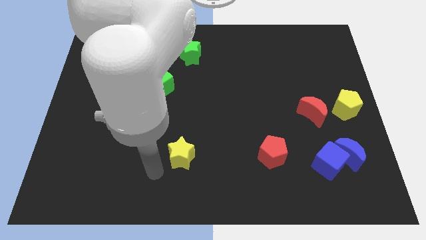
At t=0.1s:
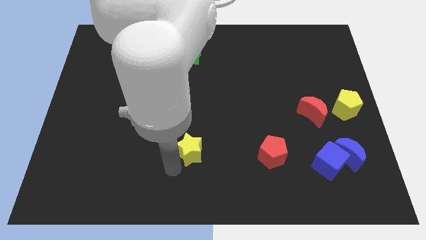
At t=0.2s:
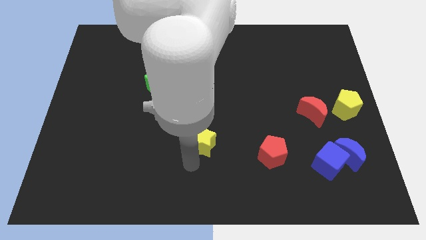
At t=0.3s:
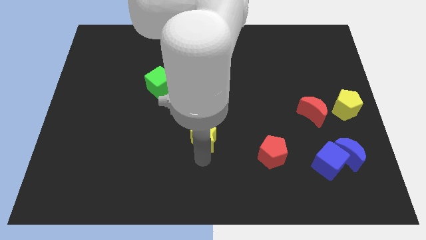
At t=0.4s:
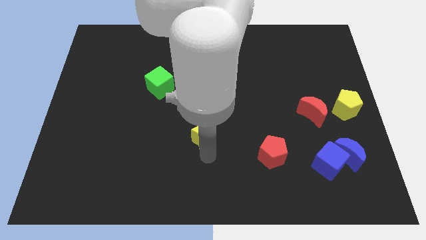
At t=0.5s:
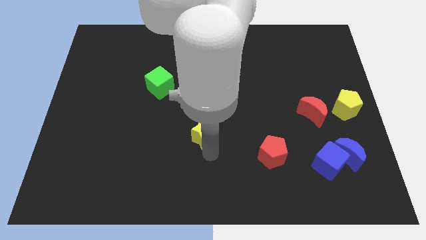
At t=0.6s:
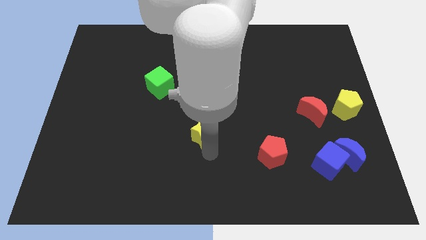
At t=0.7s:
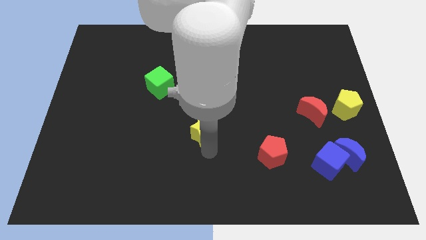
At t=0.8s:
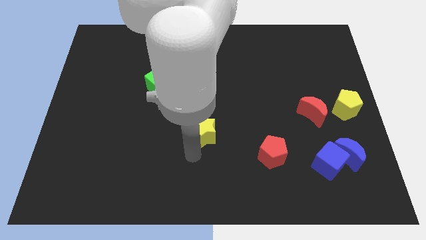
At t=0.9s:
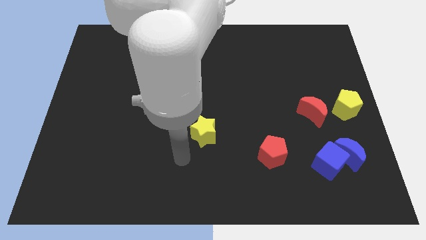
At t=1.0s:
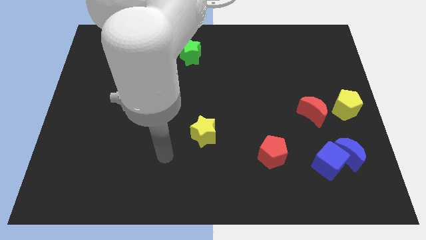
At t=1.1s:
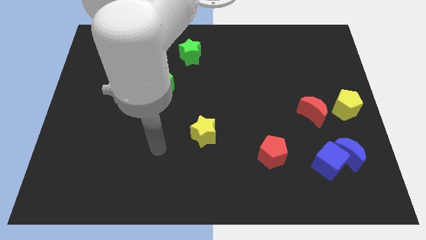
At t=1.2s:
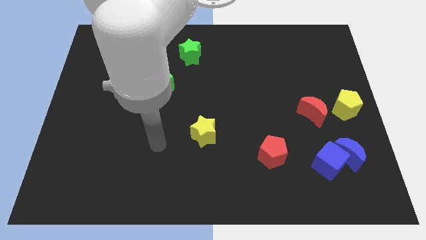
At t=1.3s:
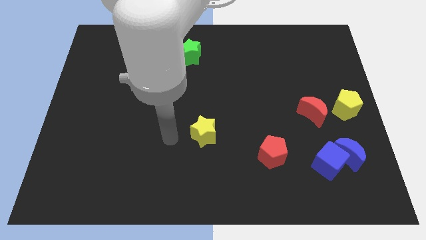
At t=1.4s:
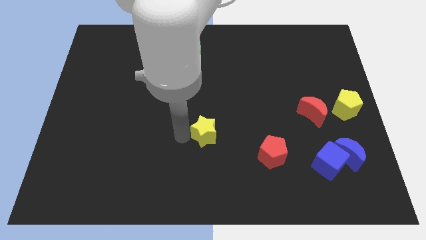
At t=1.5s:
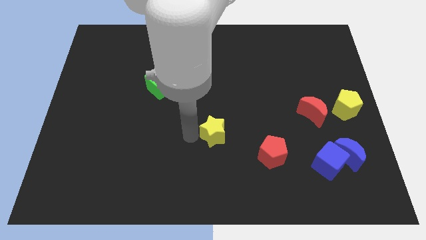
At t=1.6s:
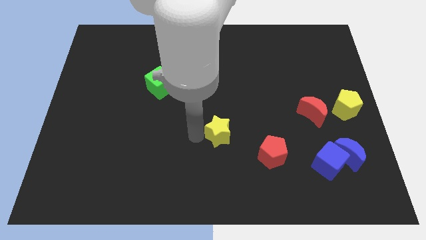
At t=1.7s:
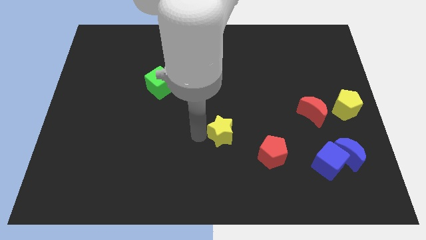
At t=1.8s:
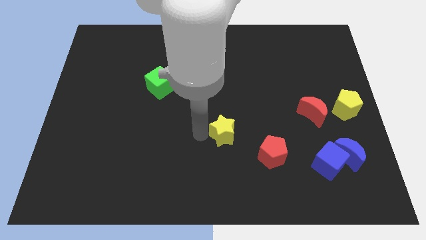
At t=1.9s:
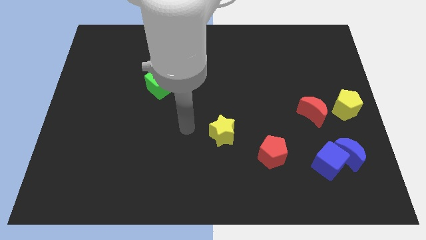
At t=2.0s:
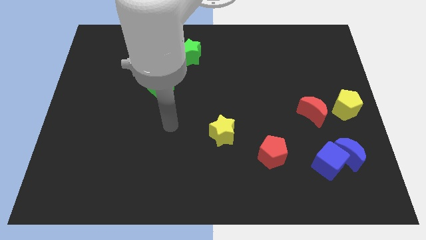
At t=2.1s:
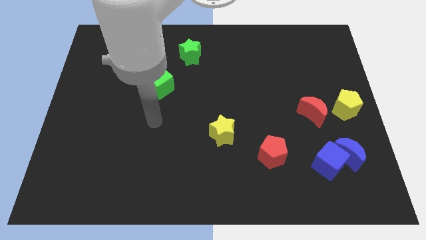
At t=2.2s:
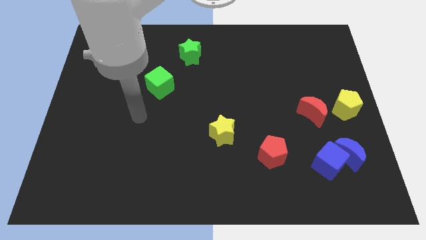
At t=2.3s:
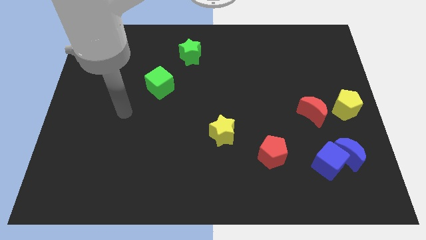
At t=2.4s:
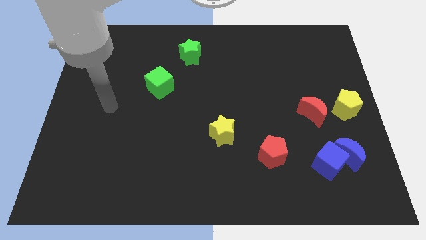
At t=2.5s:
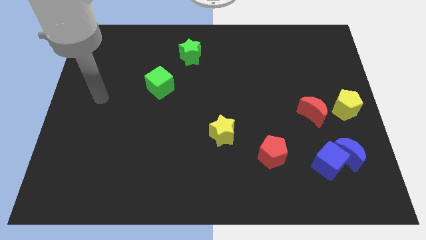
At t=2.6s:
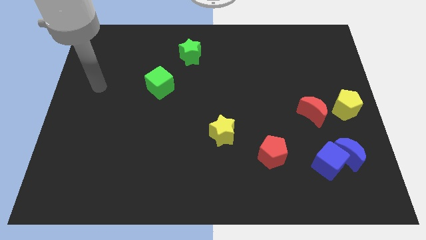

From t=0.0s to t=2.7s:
push the yellow star to the right of the board

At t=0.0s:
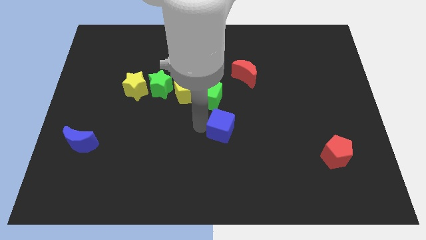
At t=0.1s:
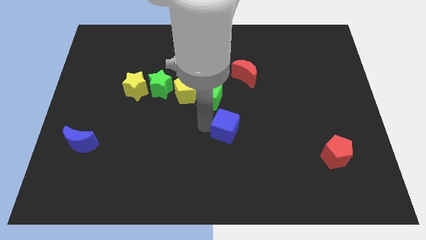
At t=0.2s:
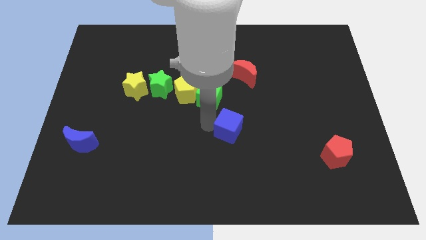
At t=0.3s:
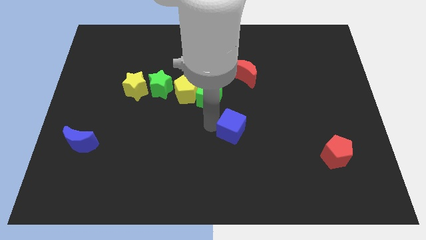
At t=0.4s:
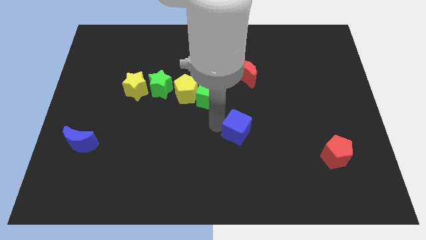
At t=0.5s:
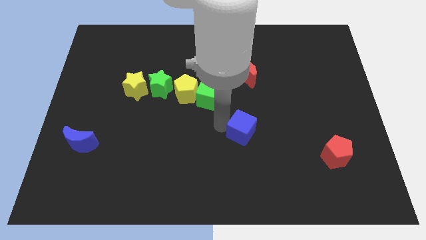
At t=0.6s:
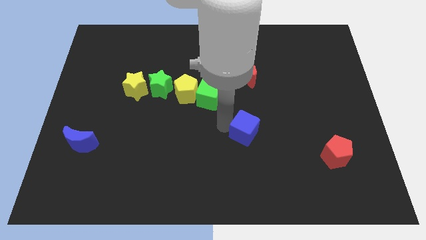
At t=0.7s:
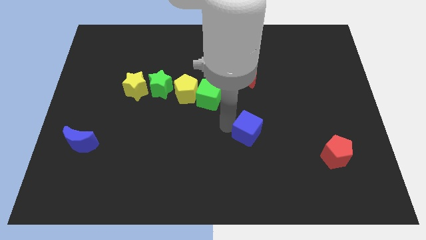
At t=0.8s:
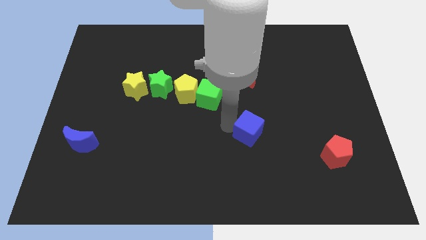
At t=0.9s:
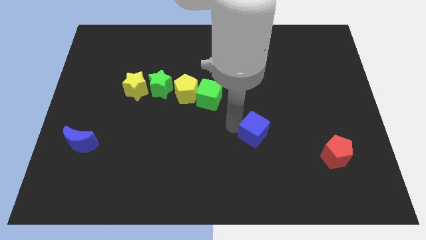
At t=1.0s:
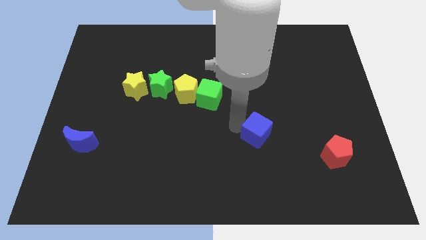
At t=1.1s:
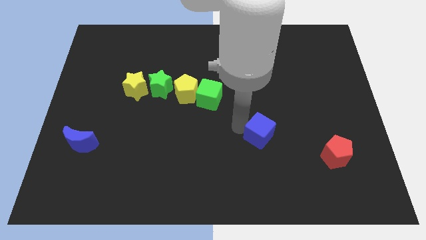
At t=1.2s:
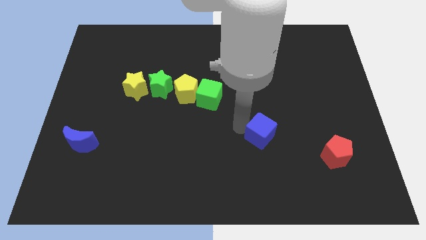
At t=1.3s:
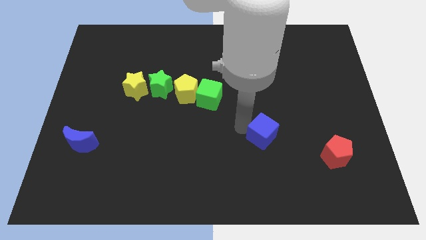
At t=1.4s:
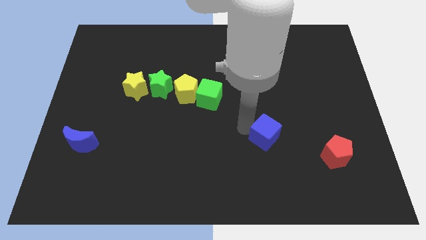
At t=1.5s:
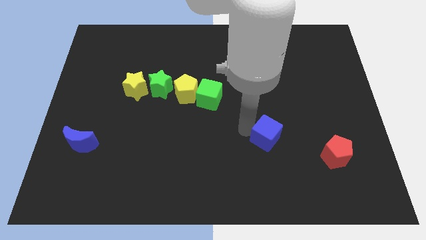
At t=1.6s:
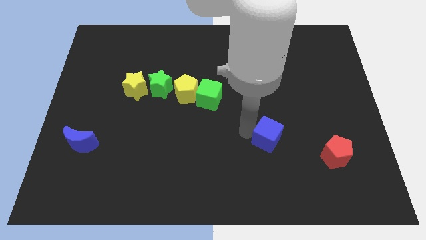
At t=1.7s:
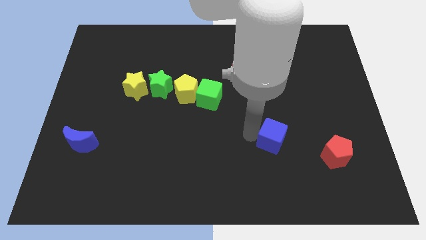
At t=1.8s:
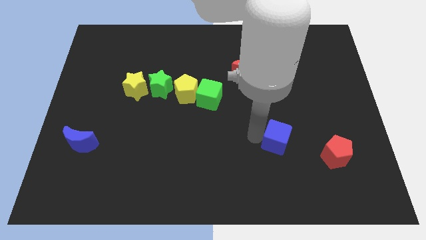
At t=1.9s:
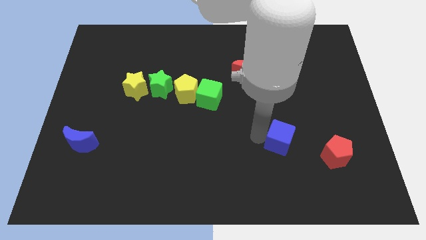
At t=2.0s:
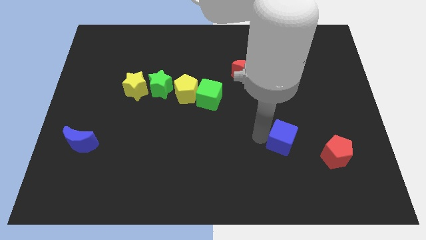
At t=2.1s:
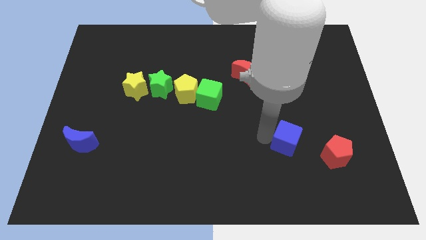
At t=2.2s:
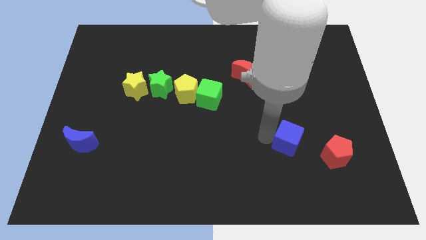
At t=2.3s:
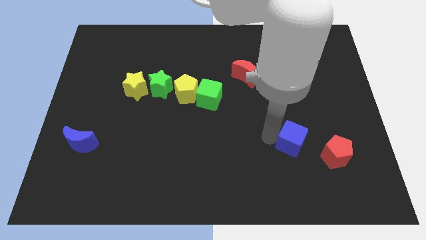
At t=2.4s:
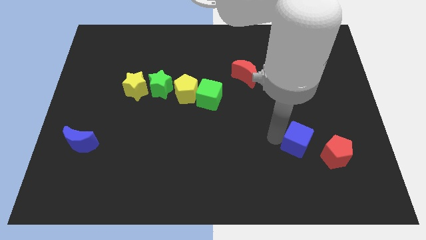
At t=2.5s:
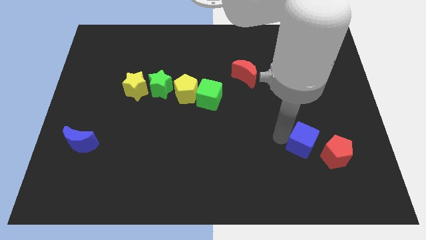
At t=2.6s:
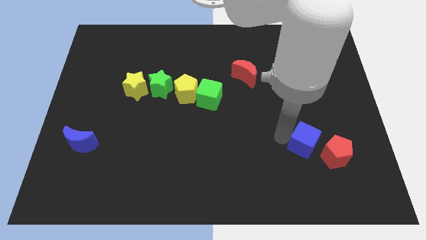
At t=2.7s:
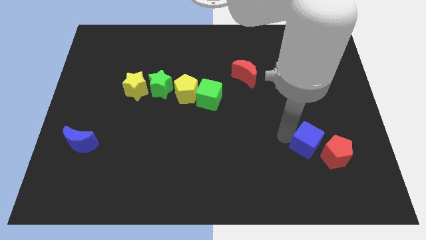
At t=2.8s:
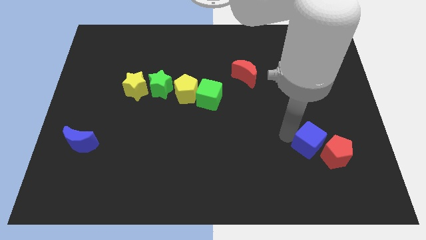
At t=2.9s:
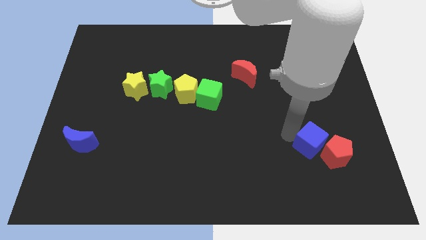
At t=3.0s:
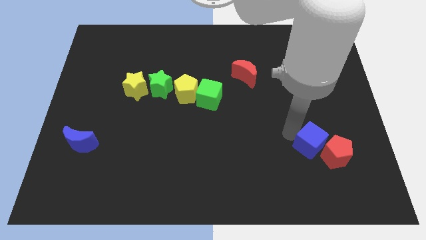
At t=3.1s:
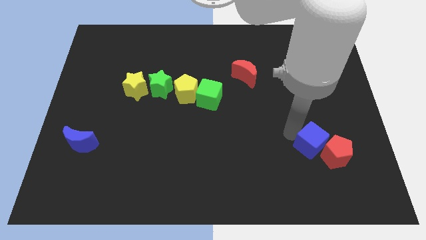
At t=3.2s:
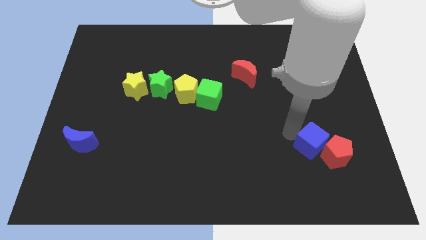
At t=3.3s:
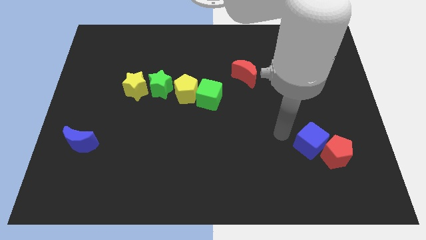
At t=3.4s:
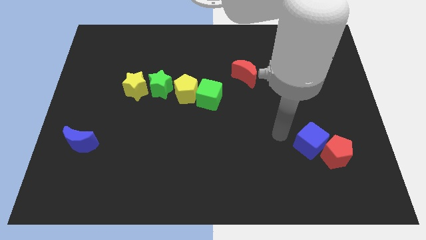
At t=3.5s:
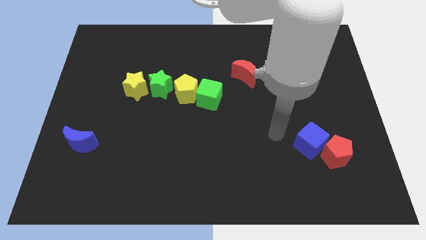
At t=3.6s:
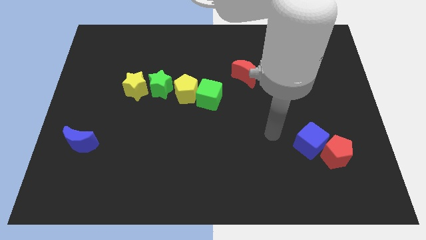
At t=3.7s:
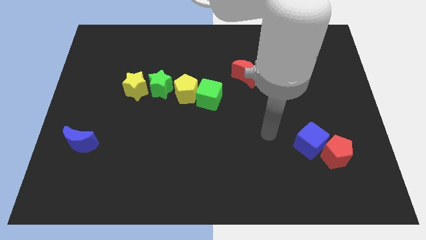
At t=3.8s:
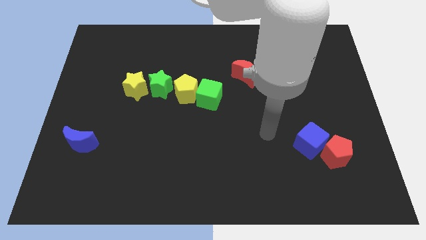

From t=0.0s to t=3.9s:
push the blue cube towards the red pentagon

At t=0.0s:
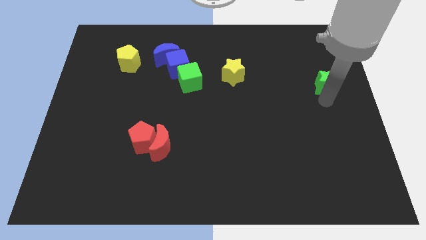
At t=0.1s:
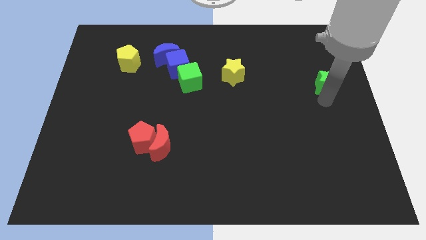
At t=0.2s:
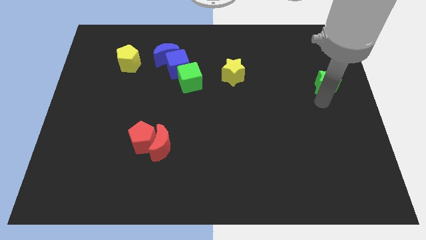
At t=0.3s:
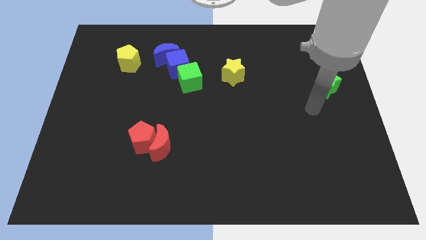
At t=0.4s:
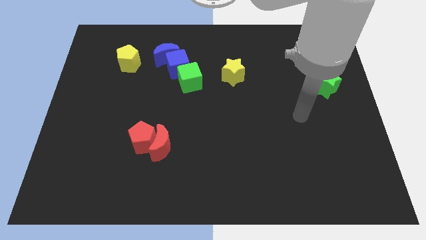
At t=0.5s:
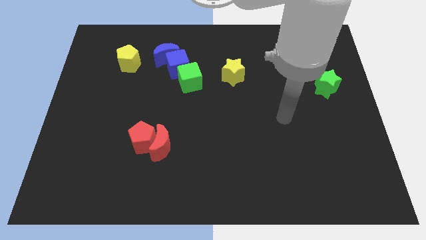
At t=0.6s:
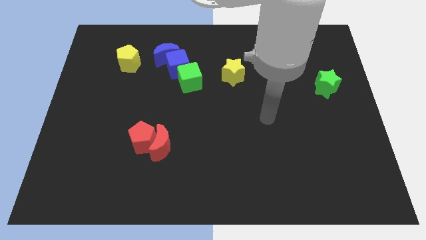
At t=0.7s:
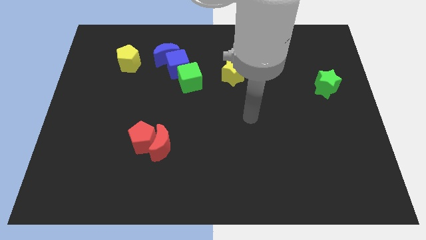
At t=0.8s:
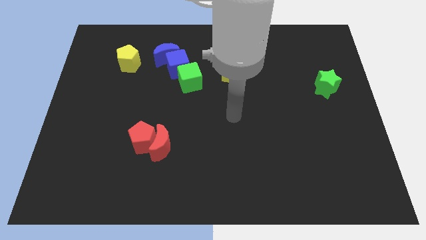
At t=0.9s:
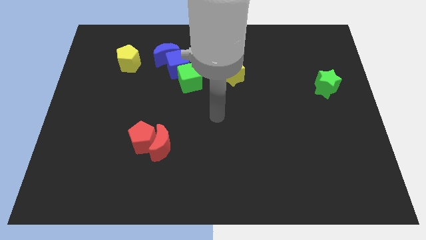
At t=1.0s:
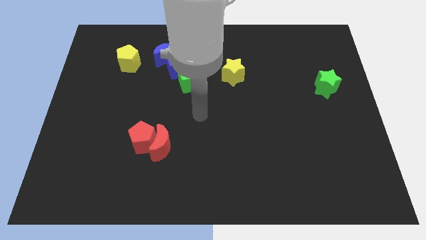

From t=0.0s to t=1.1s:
move the arm away from the green star

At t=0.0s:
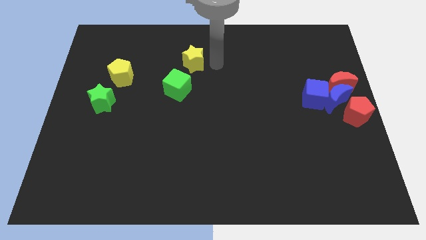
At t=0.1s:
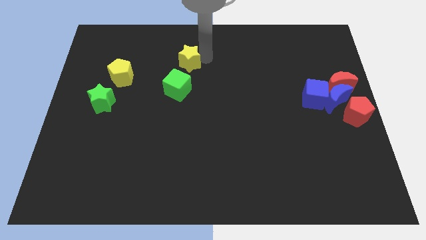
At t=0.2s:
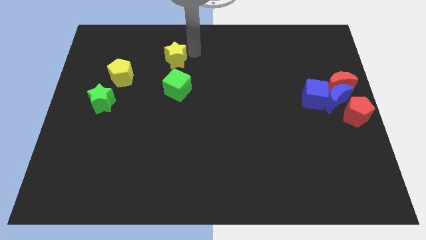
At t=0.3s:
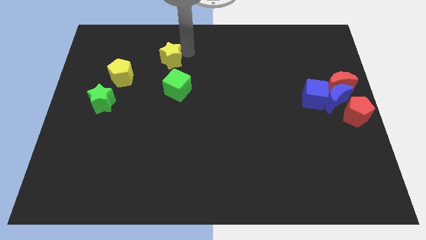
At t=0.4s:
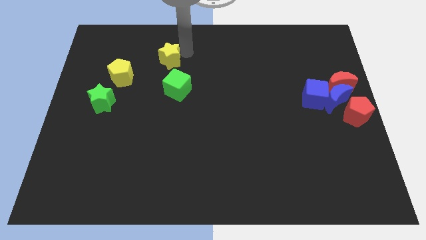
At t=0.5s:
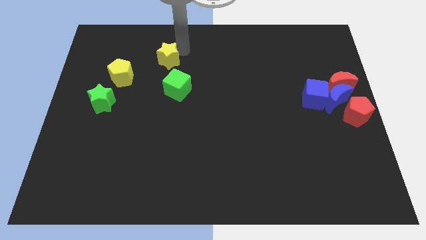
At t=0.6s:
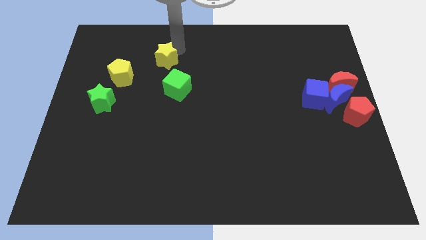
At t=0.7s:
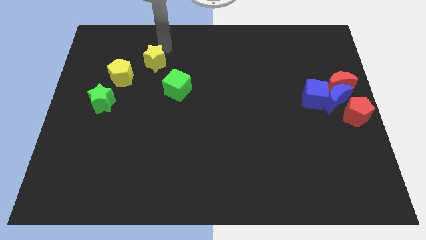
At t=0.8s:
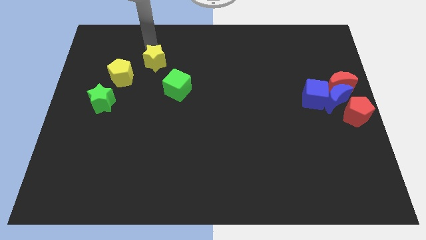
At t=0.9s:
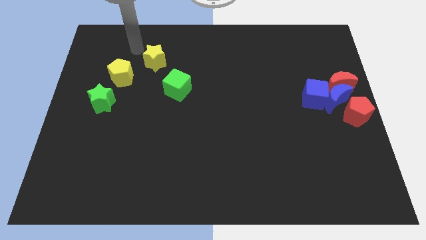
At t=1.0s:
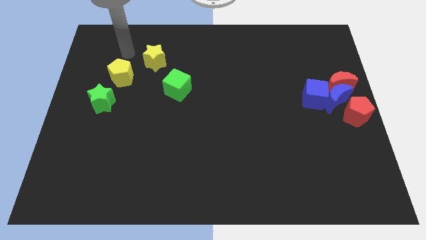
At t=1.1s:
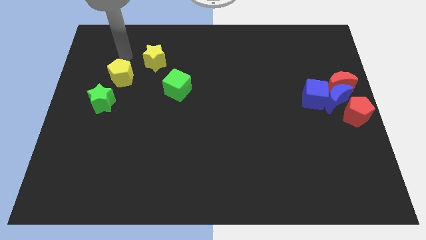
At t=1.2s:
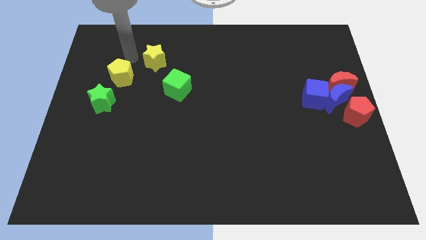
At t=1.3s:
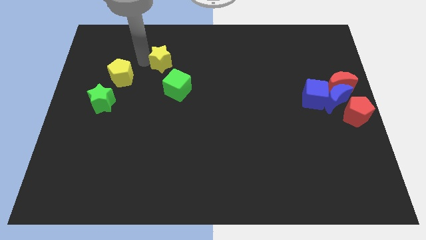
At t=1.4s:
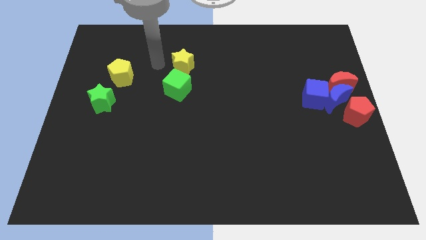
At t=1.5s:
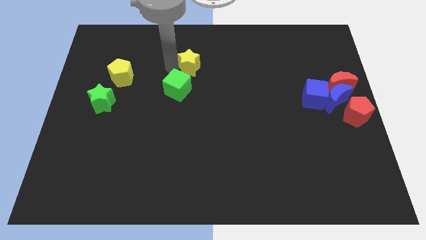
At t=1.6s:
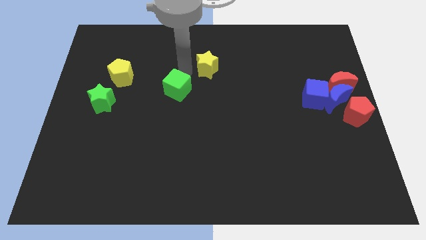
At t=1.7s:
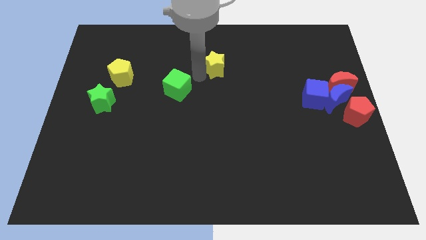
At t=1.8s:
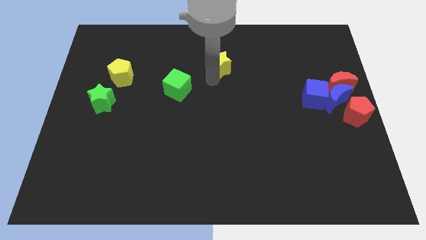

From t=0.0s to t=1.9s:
push the yellow star to the center side
